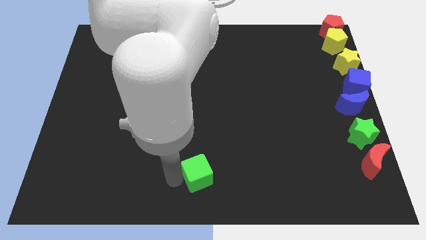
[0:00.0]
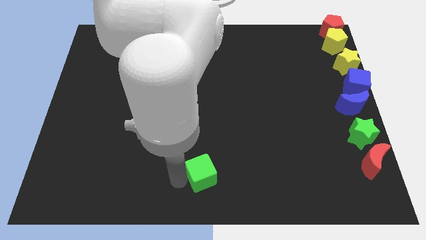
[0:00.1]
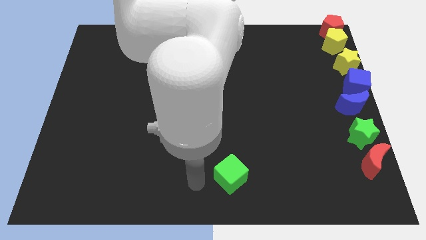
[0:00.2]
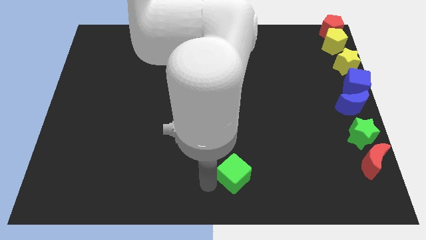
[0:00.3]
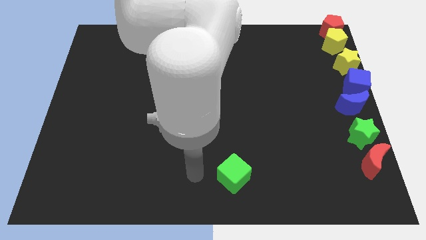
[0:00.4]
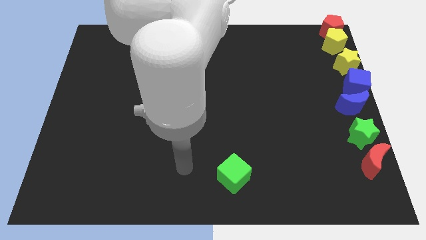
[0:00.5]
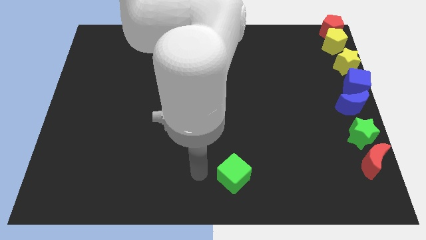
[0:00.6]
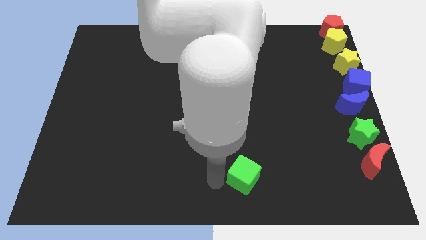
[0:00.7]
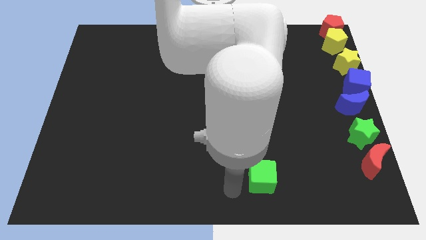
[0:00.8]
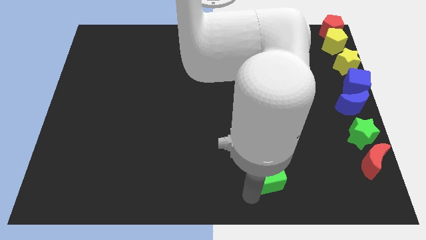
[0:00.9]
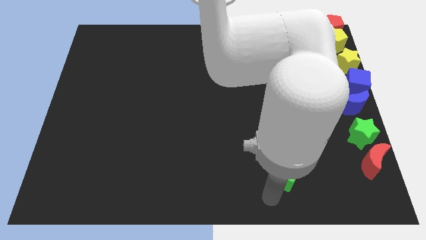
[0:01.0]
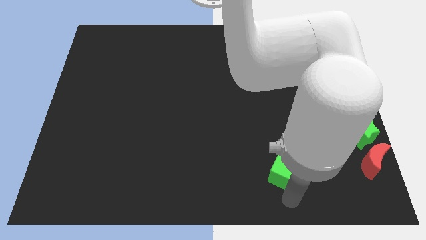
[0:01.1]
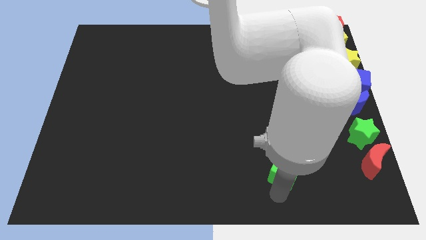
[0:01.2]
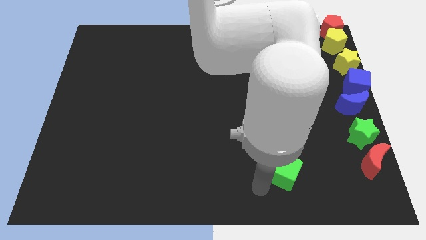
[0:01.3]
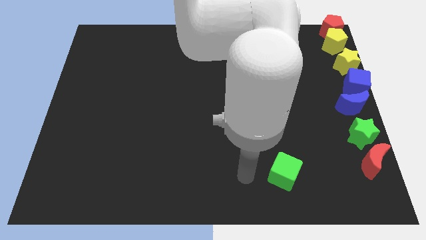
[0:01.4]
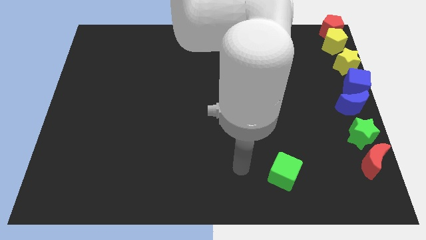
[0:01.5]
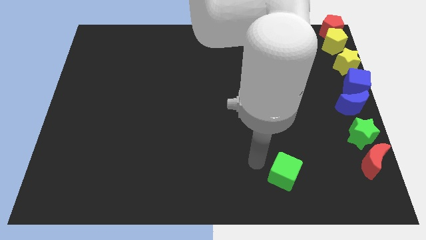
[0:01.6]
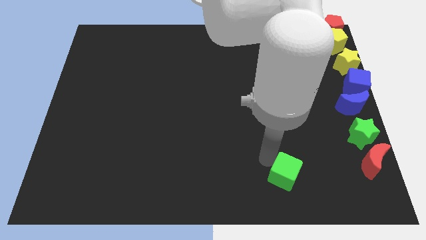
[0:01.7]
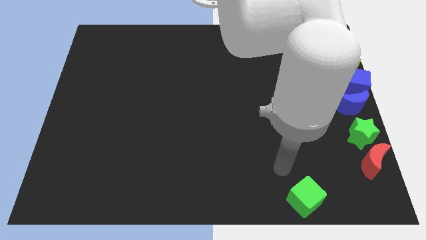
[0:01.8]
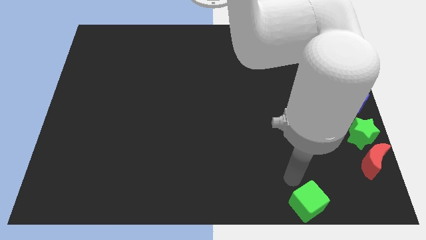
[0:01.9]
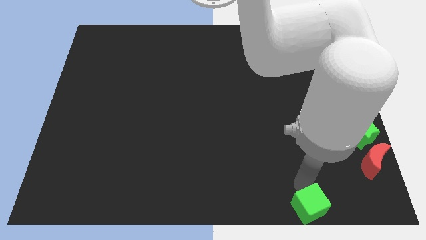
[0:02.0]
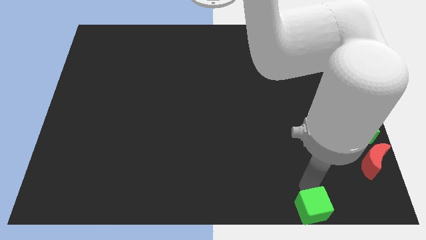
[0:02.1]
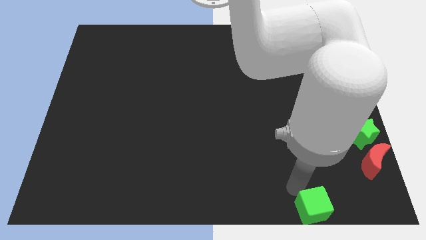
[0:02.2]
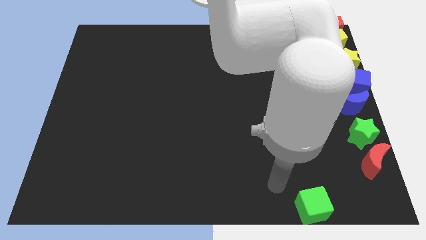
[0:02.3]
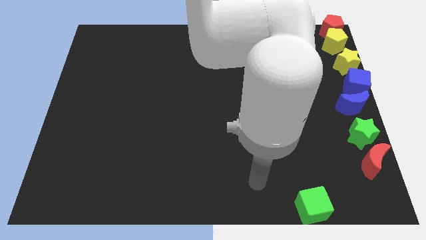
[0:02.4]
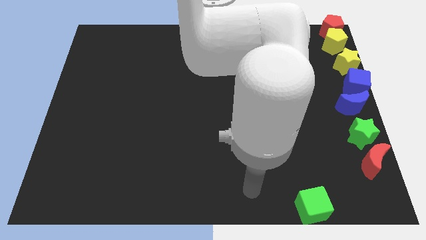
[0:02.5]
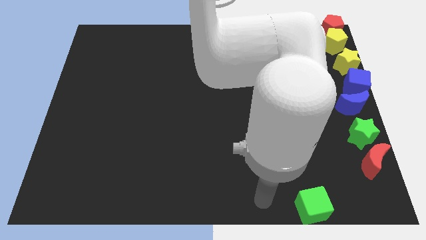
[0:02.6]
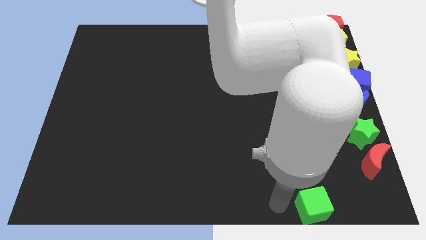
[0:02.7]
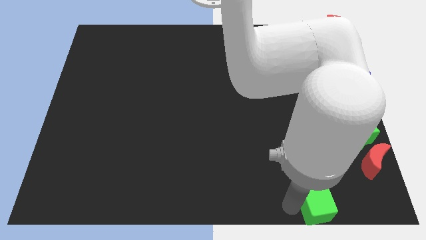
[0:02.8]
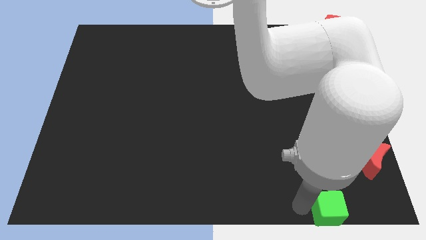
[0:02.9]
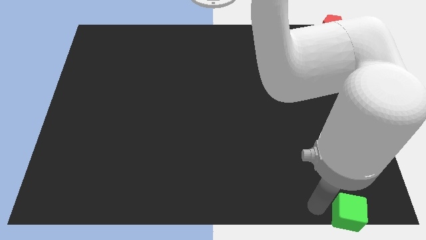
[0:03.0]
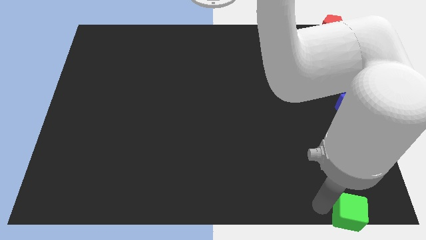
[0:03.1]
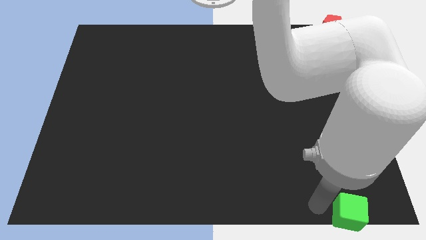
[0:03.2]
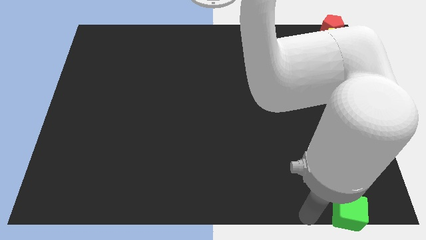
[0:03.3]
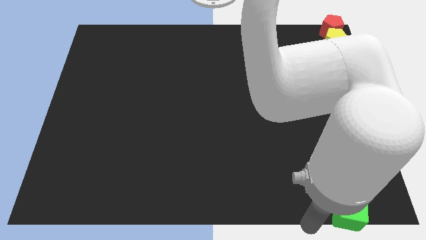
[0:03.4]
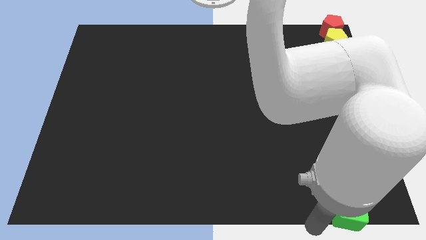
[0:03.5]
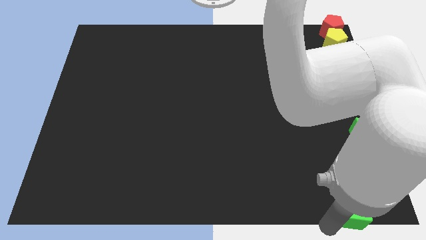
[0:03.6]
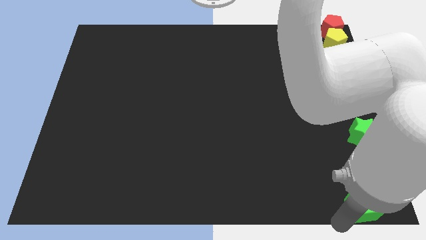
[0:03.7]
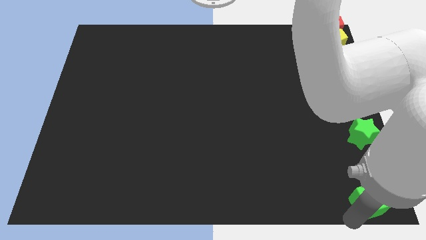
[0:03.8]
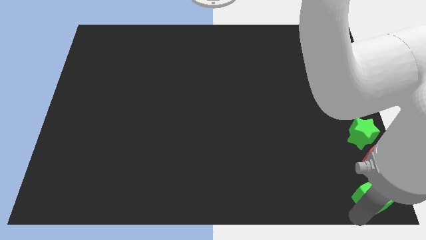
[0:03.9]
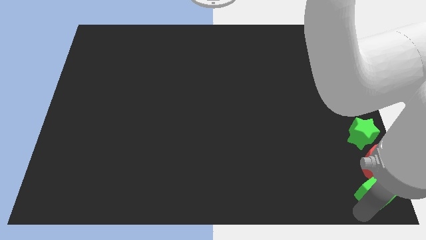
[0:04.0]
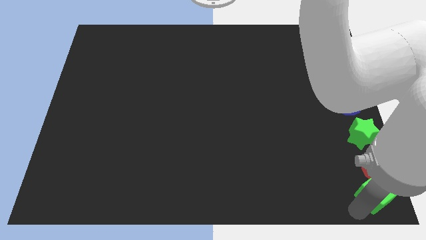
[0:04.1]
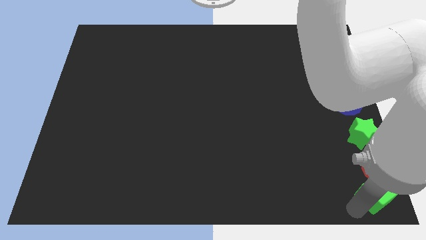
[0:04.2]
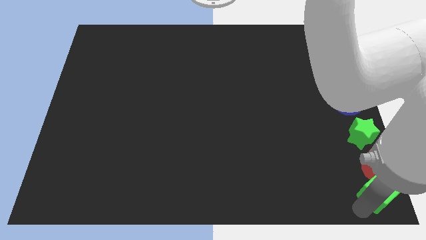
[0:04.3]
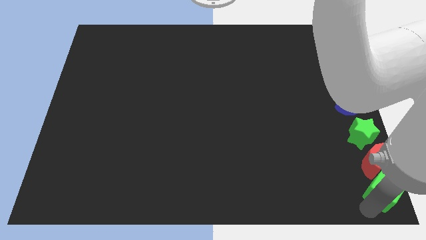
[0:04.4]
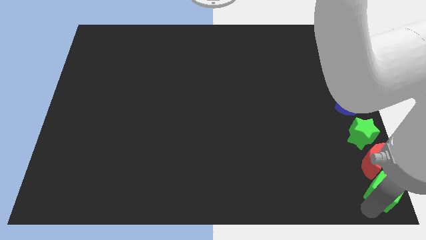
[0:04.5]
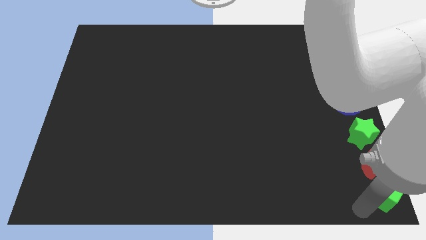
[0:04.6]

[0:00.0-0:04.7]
place the green cube at bottom right corner of the board

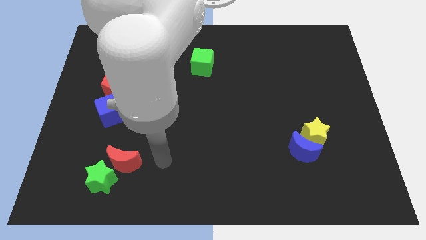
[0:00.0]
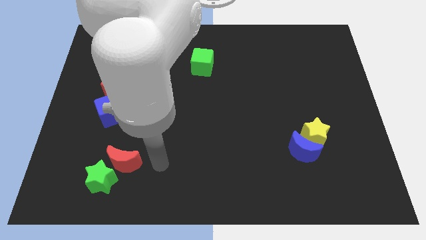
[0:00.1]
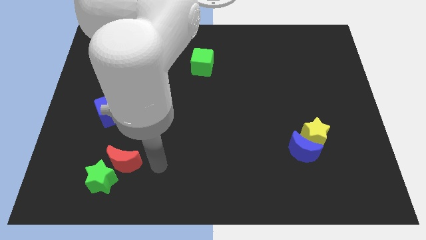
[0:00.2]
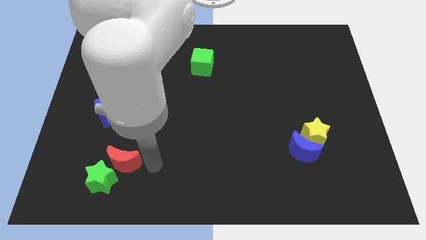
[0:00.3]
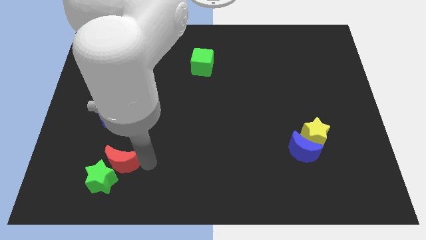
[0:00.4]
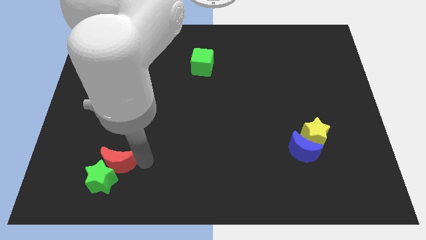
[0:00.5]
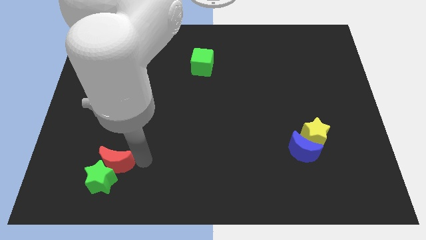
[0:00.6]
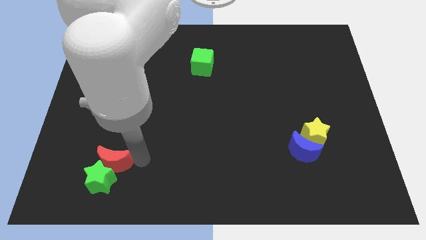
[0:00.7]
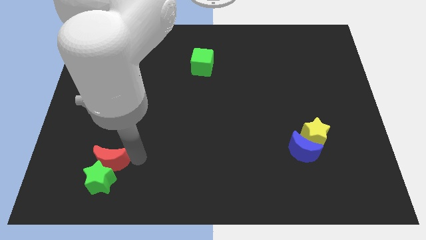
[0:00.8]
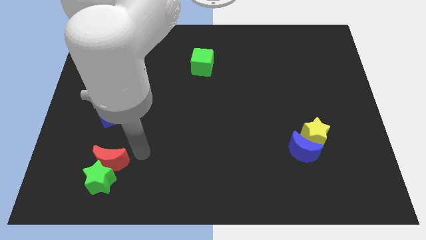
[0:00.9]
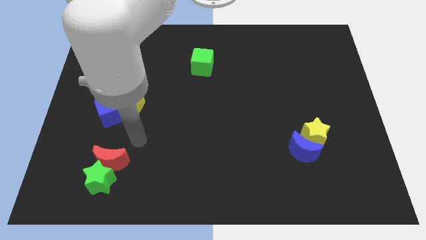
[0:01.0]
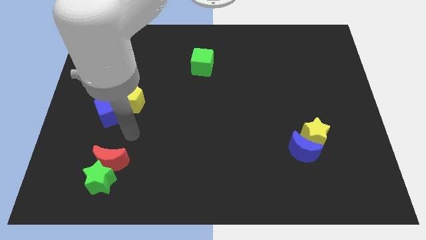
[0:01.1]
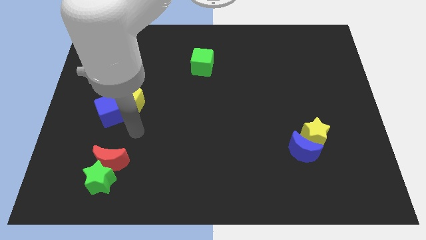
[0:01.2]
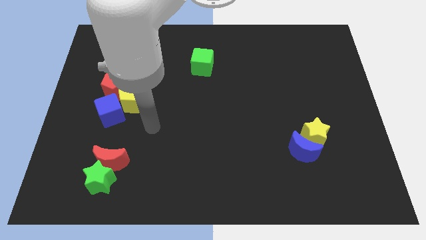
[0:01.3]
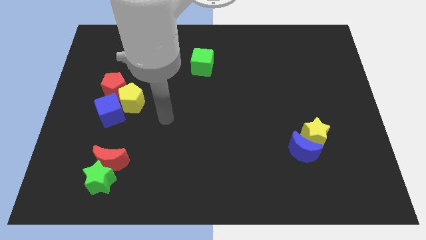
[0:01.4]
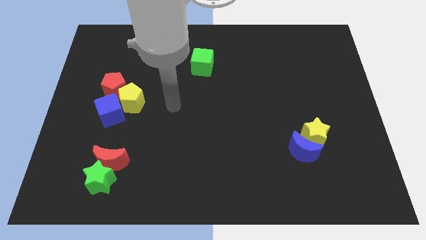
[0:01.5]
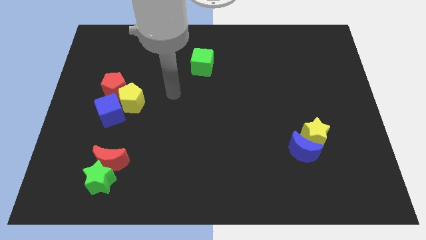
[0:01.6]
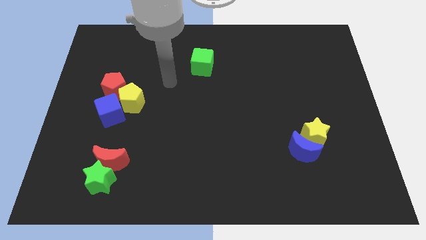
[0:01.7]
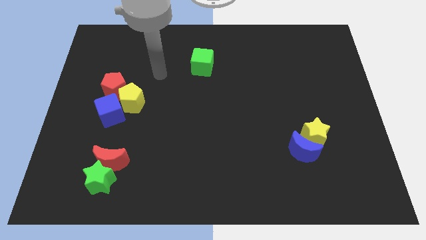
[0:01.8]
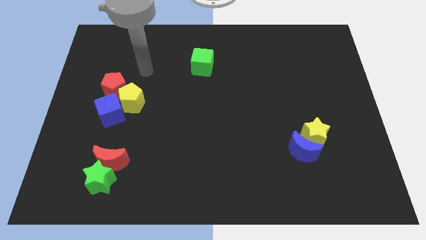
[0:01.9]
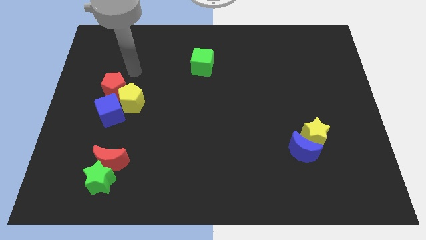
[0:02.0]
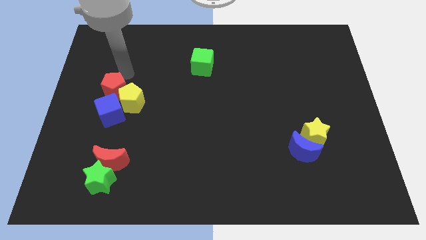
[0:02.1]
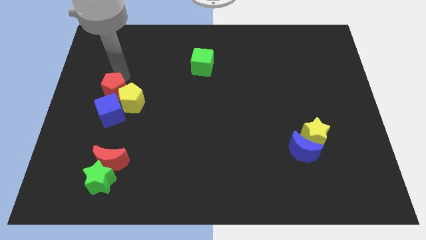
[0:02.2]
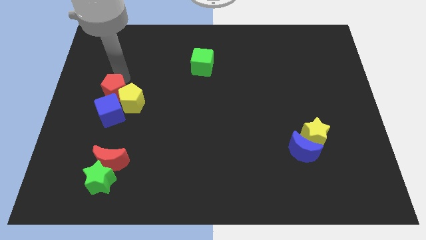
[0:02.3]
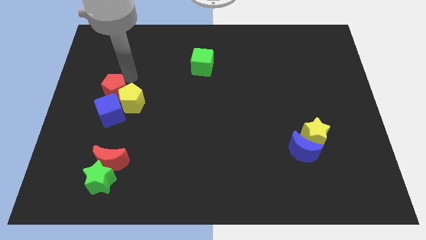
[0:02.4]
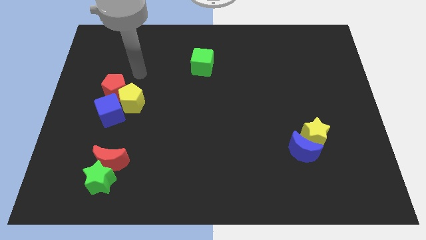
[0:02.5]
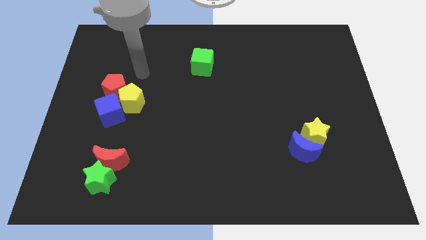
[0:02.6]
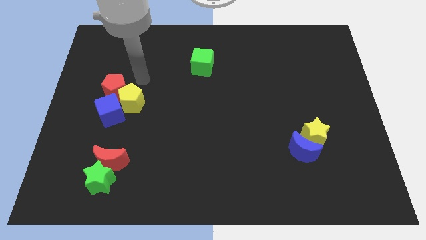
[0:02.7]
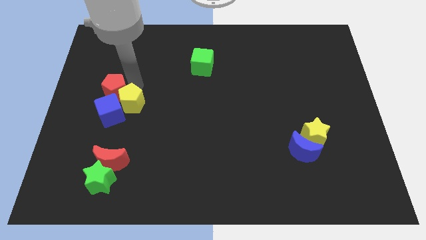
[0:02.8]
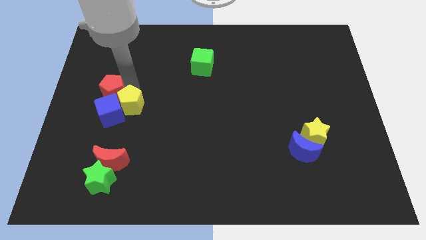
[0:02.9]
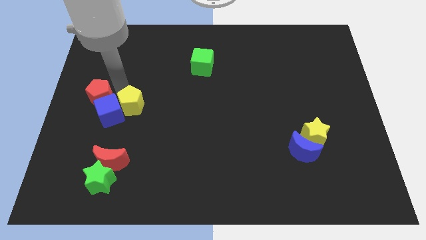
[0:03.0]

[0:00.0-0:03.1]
place the arm in between red and yellow pentagons

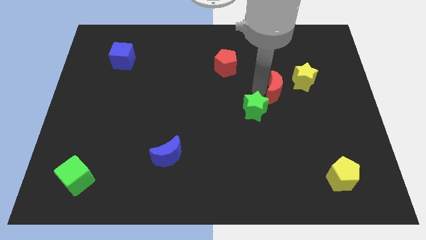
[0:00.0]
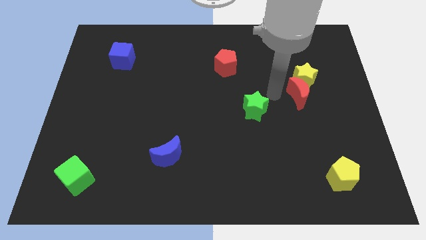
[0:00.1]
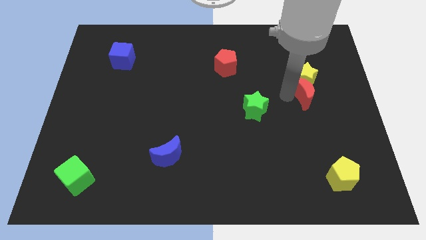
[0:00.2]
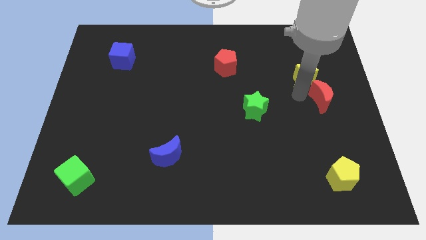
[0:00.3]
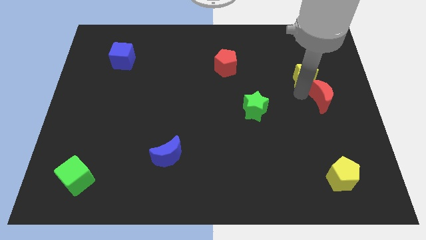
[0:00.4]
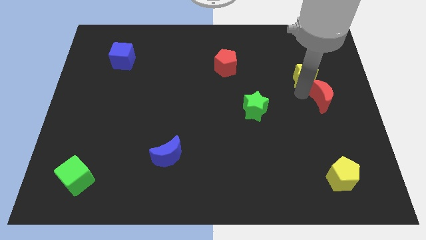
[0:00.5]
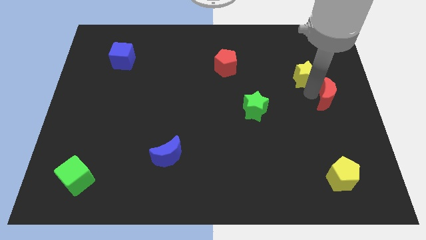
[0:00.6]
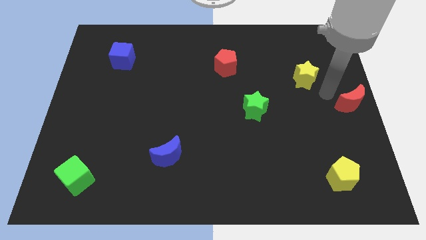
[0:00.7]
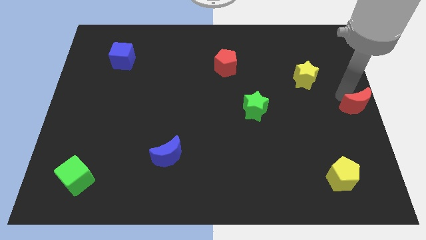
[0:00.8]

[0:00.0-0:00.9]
move the red moon to center right

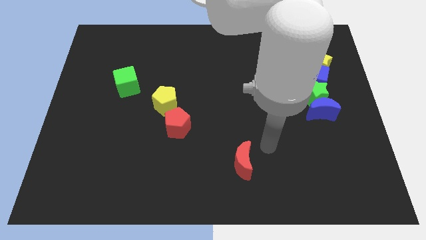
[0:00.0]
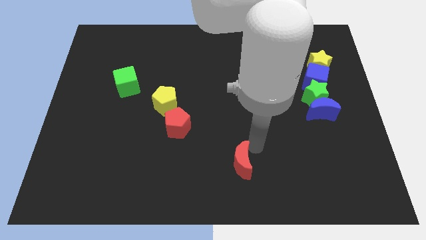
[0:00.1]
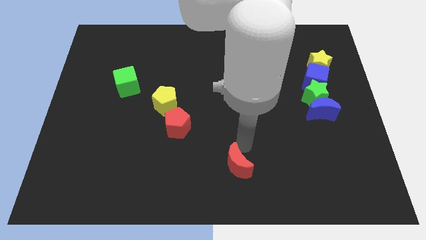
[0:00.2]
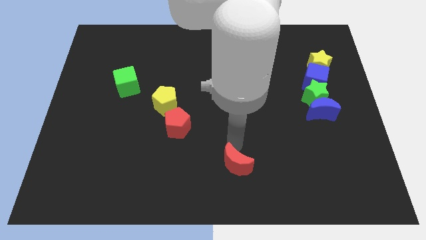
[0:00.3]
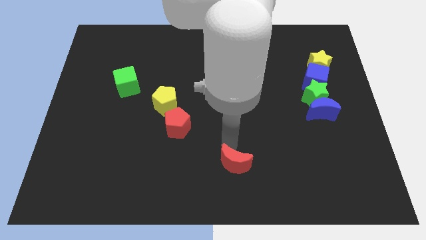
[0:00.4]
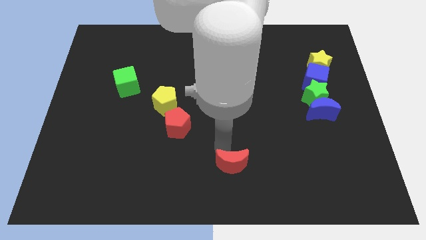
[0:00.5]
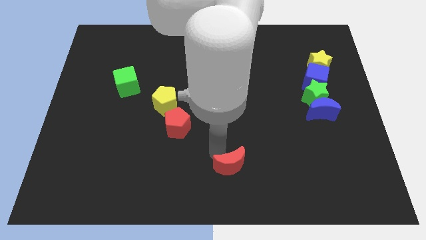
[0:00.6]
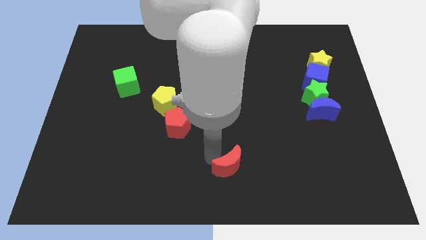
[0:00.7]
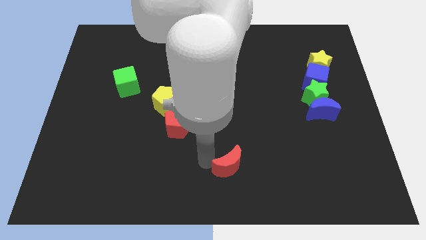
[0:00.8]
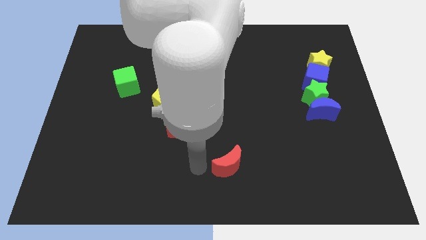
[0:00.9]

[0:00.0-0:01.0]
slightly move the red crescent towards bottom of the board
